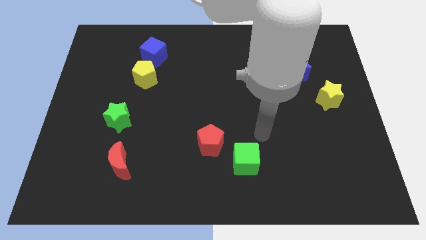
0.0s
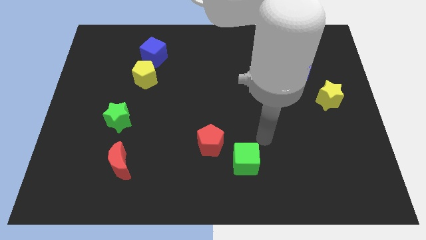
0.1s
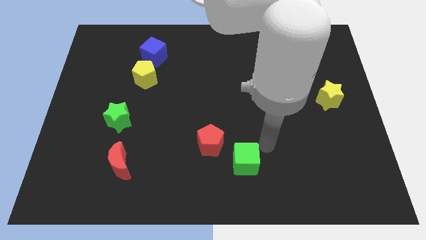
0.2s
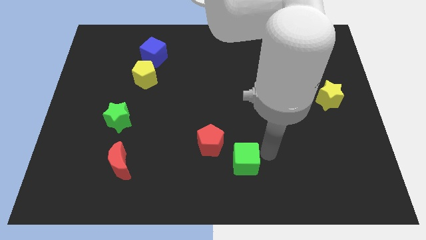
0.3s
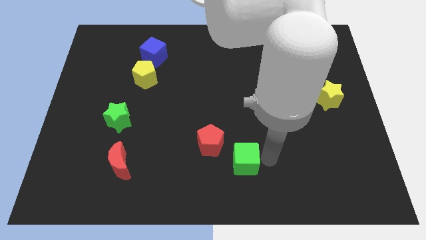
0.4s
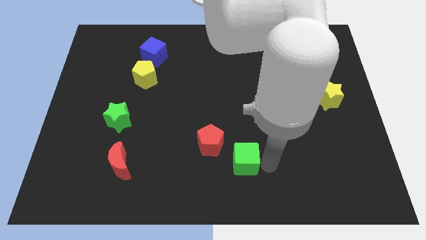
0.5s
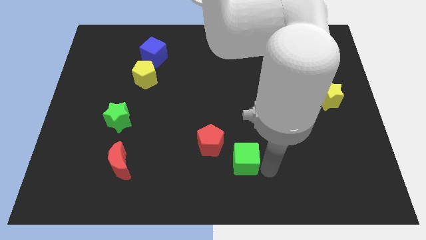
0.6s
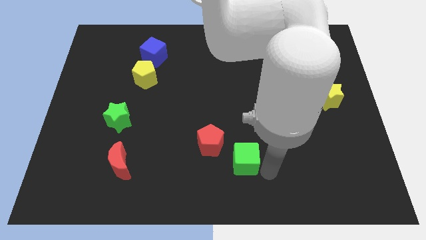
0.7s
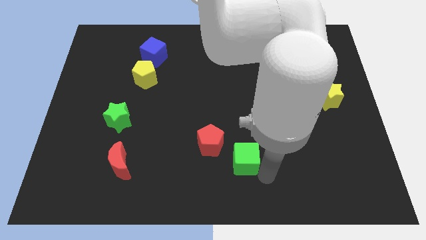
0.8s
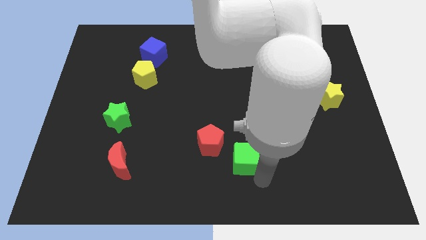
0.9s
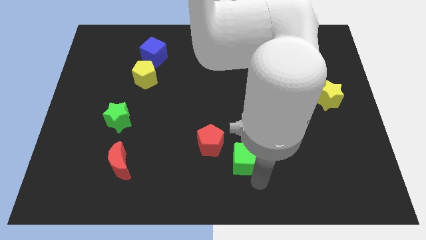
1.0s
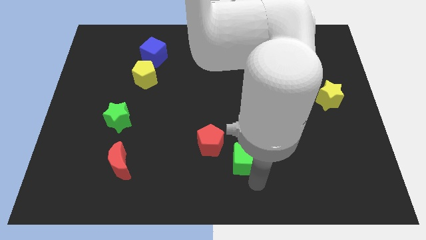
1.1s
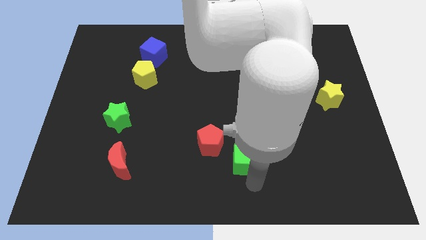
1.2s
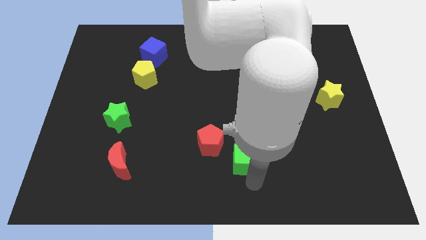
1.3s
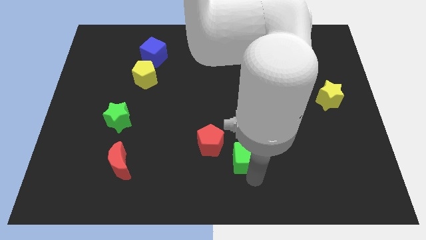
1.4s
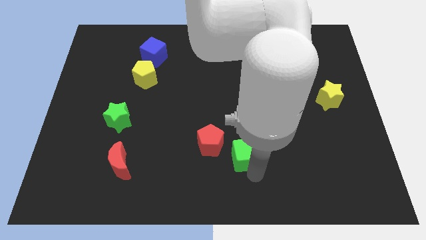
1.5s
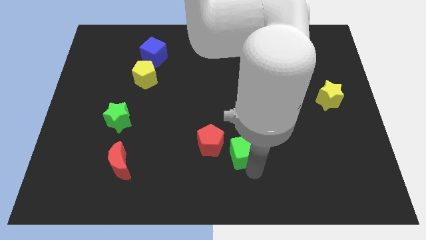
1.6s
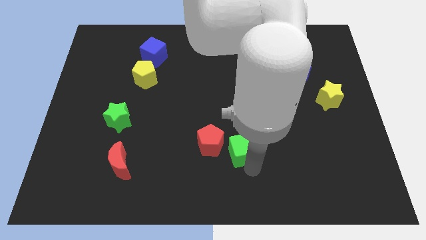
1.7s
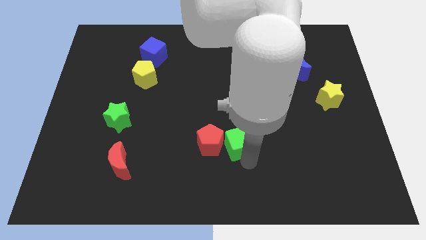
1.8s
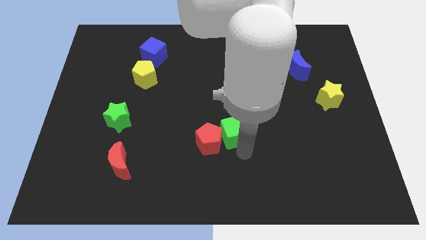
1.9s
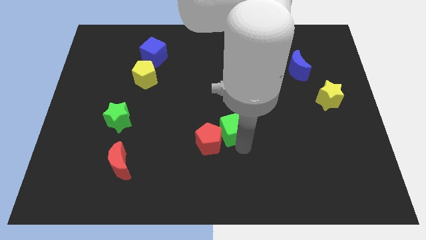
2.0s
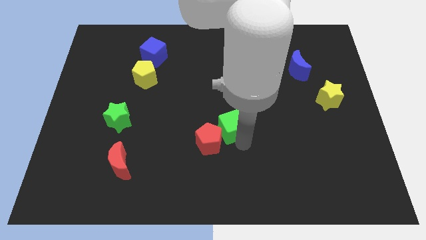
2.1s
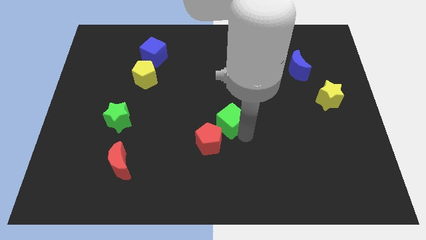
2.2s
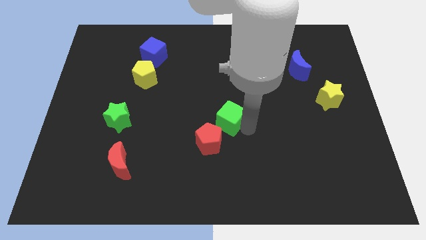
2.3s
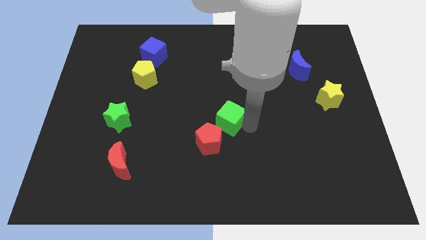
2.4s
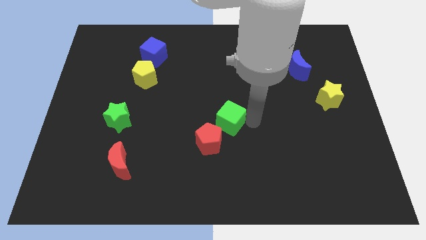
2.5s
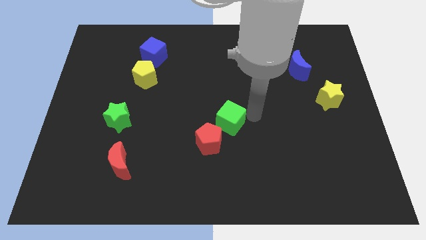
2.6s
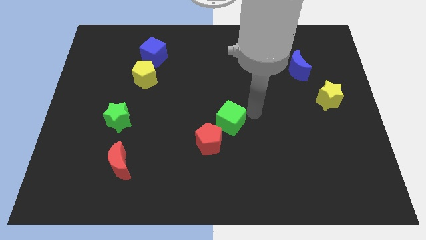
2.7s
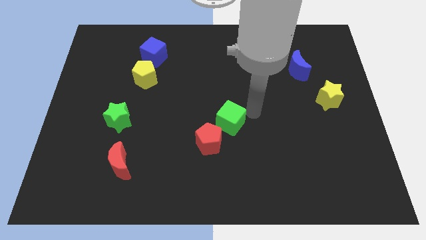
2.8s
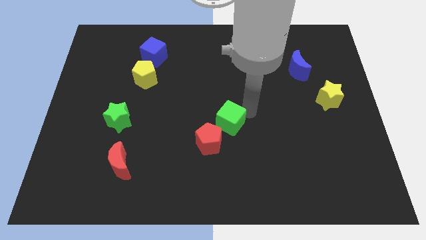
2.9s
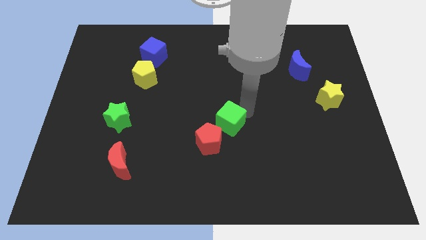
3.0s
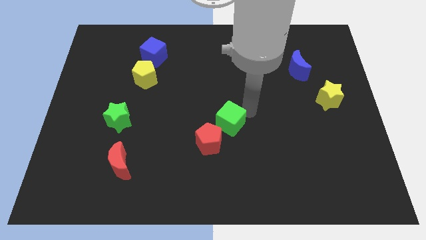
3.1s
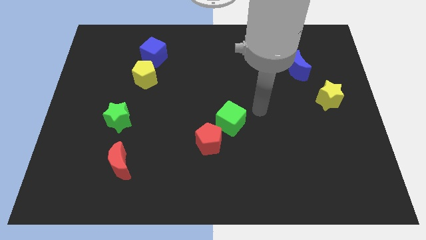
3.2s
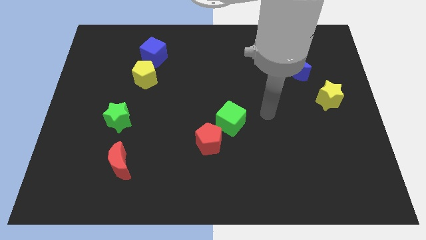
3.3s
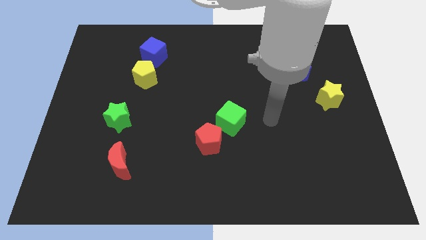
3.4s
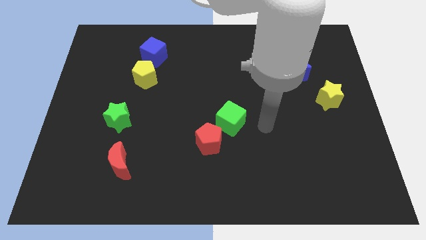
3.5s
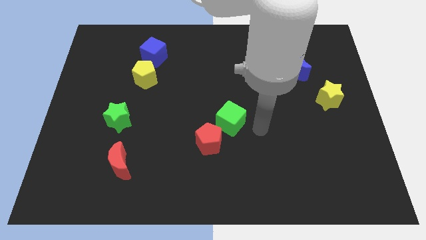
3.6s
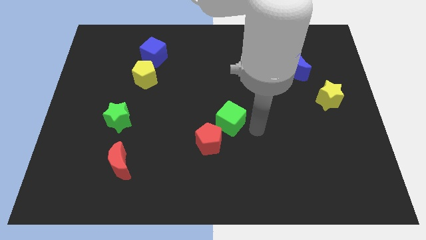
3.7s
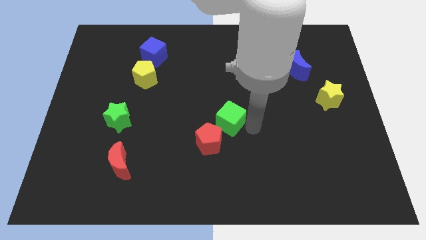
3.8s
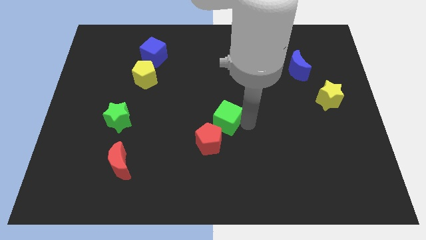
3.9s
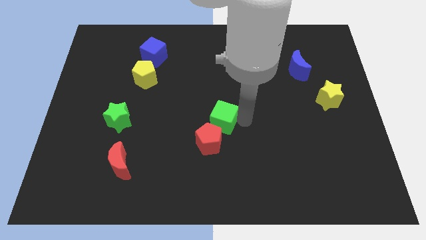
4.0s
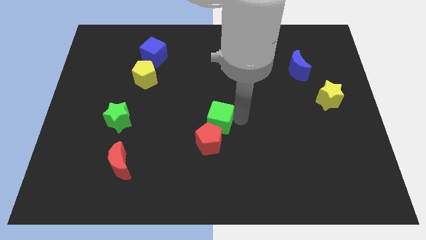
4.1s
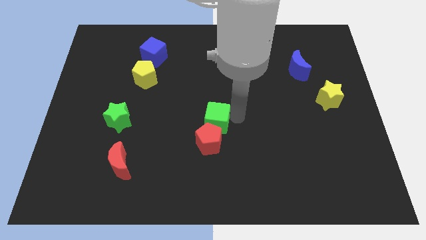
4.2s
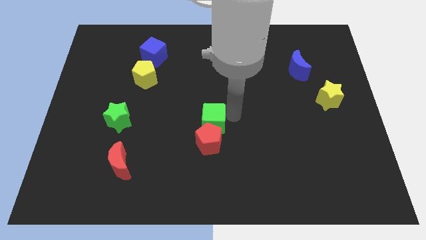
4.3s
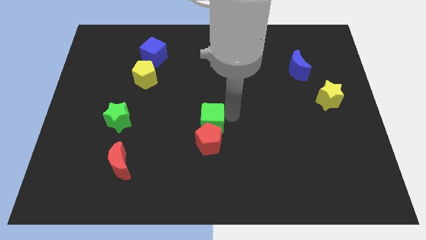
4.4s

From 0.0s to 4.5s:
move the green block towards the top of the red pentagon

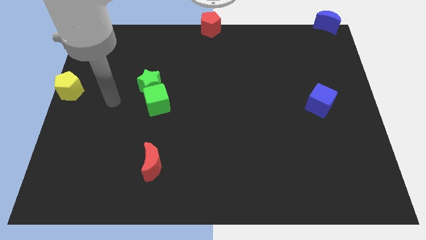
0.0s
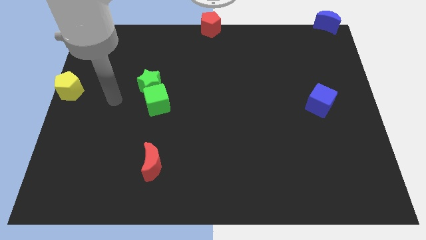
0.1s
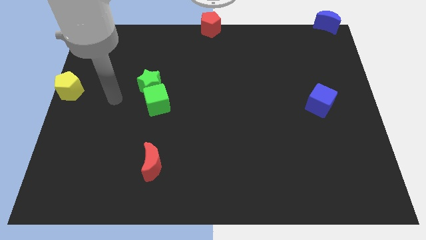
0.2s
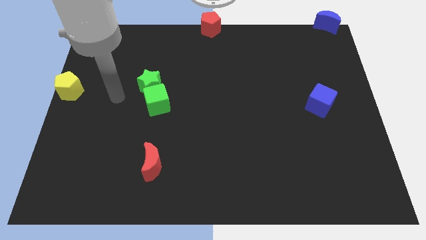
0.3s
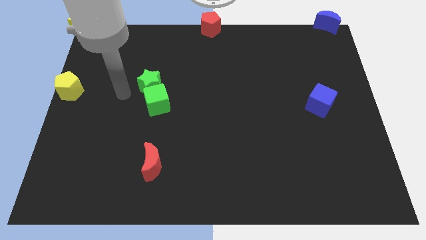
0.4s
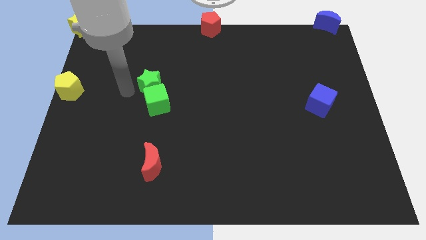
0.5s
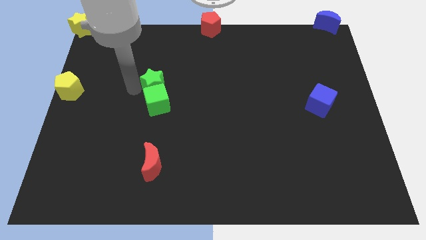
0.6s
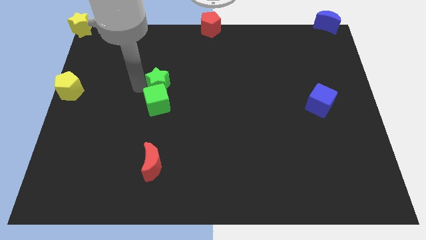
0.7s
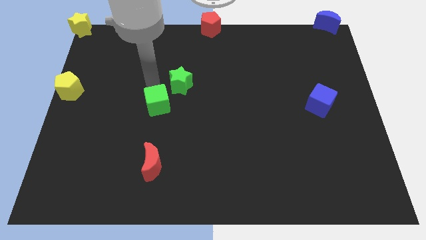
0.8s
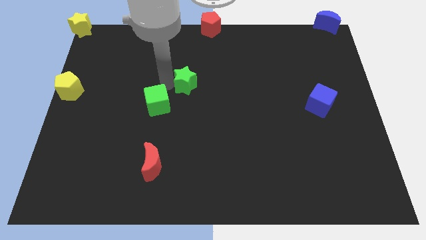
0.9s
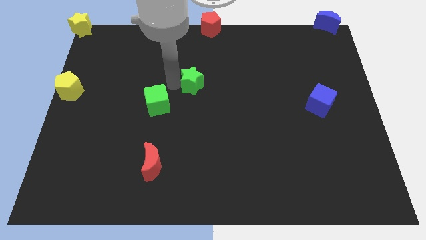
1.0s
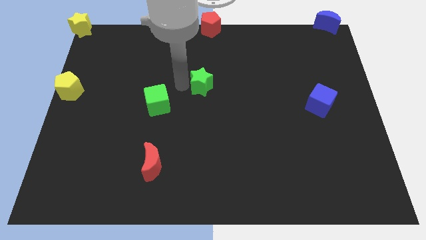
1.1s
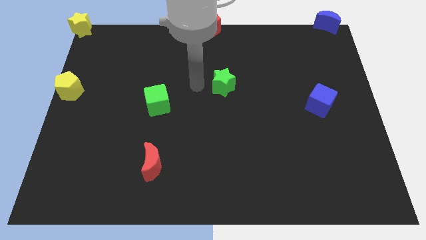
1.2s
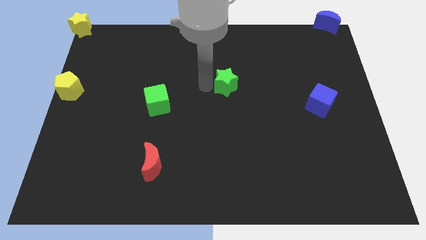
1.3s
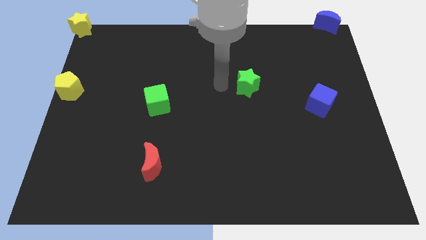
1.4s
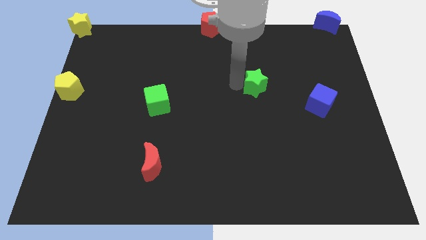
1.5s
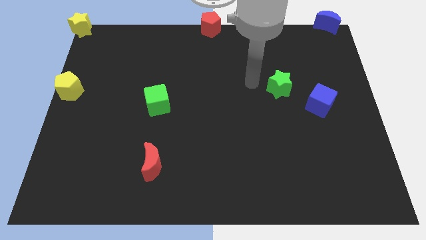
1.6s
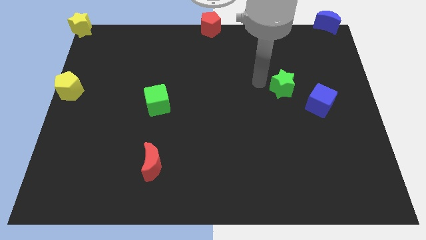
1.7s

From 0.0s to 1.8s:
move the green star away from the green cube

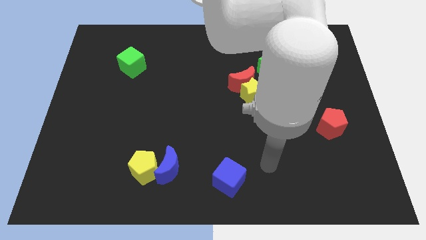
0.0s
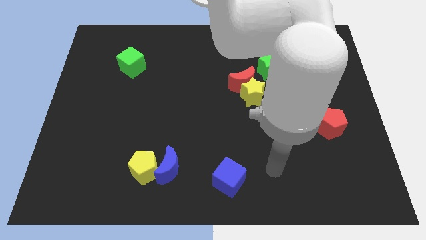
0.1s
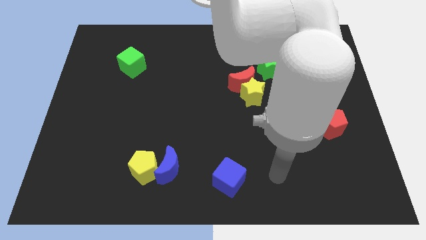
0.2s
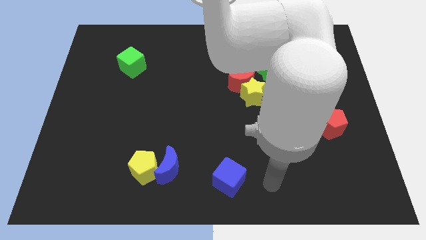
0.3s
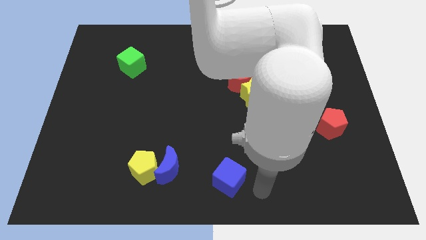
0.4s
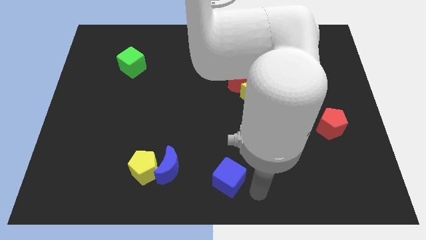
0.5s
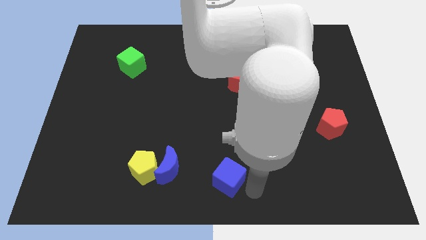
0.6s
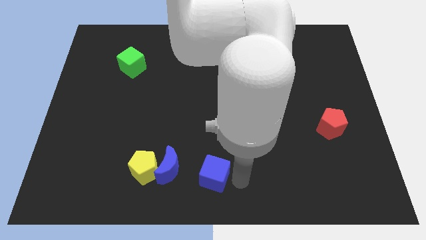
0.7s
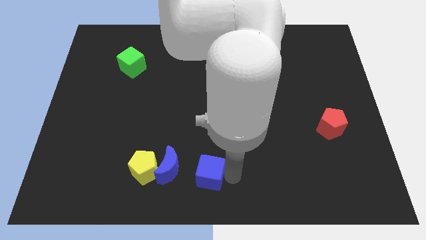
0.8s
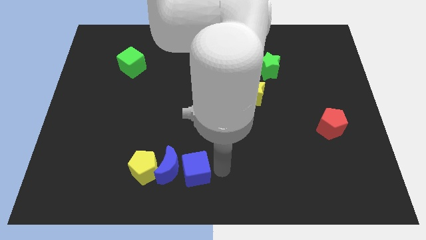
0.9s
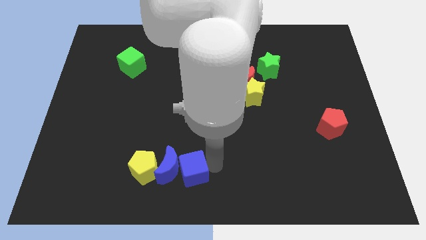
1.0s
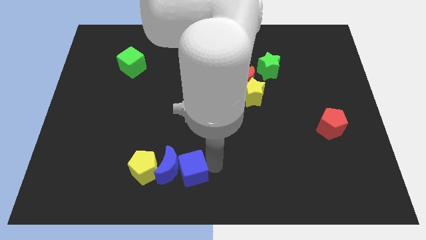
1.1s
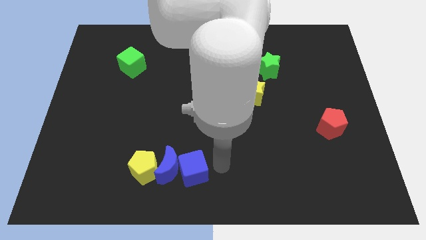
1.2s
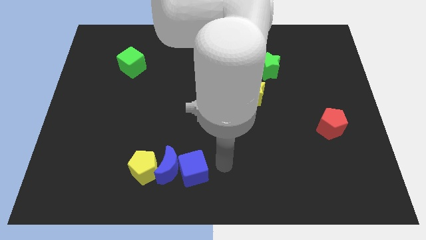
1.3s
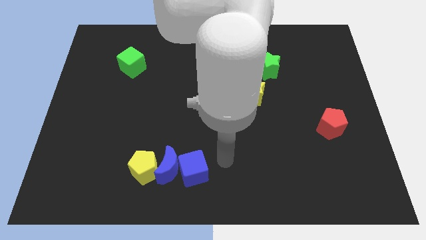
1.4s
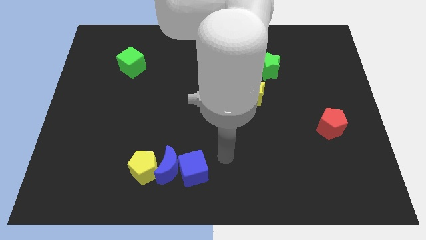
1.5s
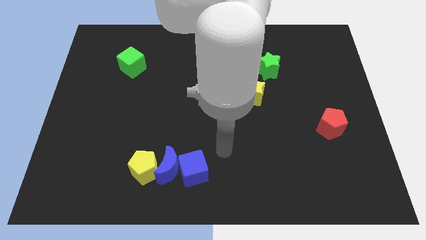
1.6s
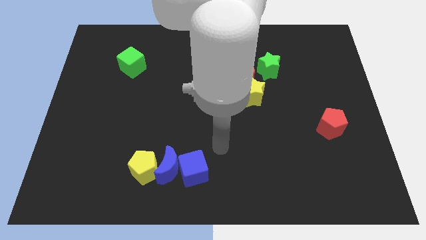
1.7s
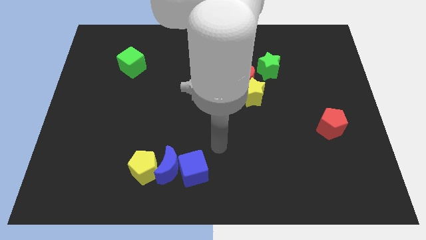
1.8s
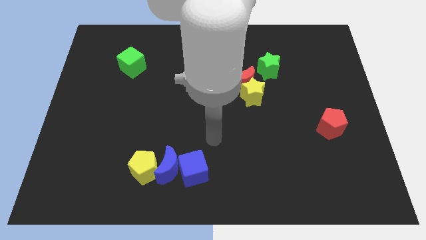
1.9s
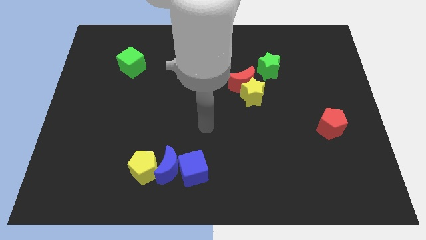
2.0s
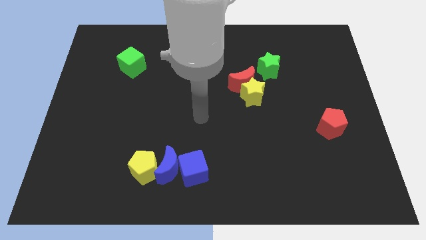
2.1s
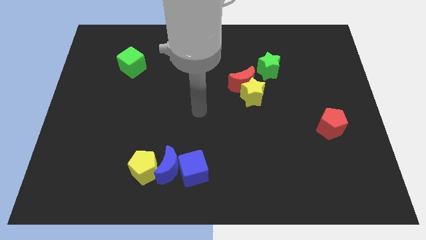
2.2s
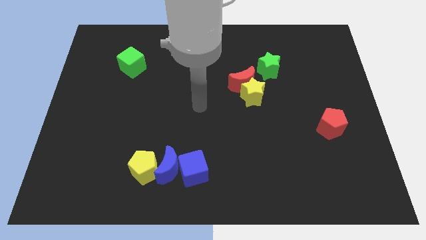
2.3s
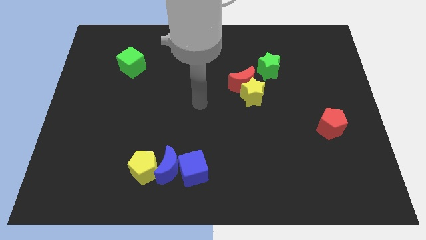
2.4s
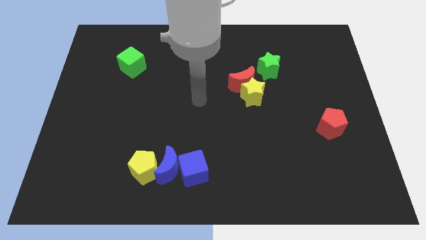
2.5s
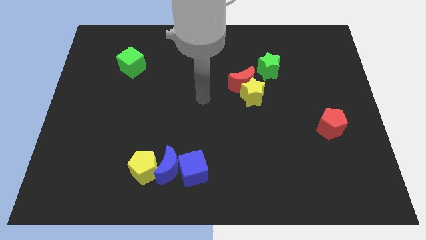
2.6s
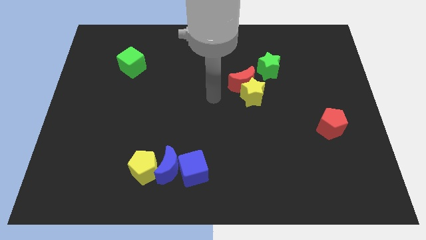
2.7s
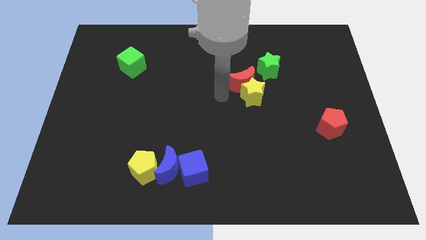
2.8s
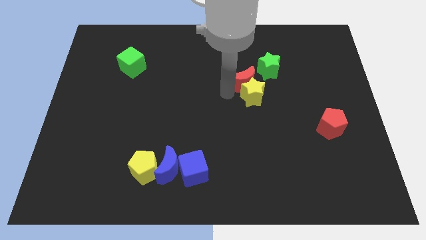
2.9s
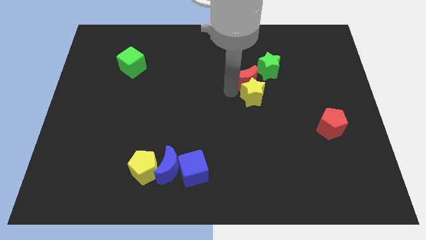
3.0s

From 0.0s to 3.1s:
move blue cube middl eof the board
